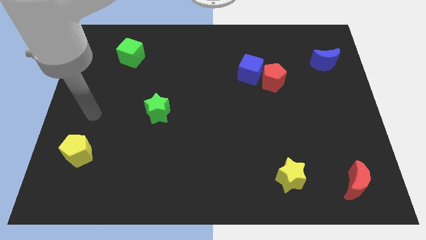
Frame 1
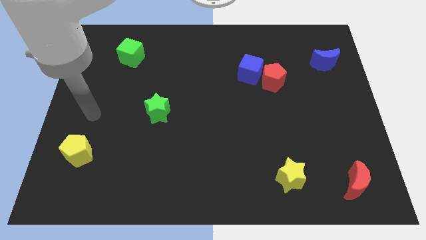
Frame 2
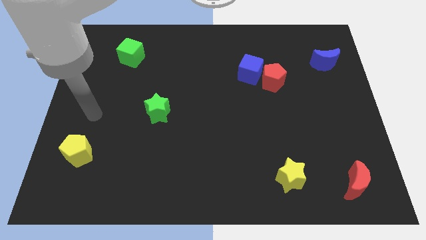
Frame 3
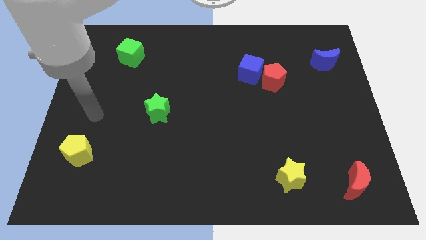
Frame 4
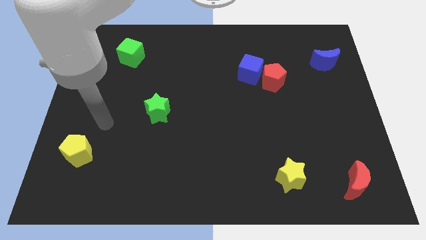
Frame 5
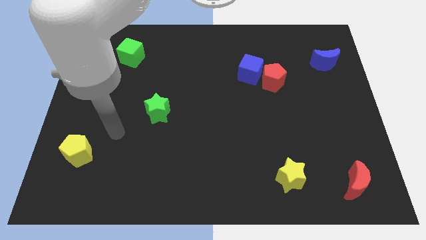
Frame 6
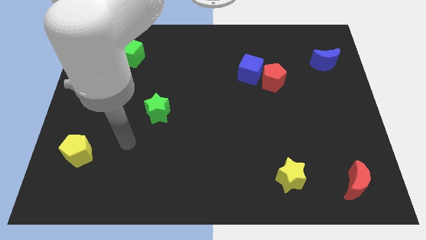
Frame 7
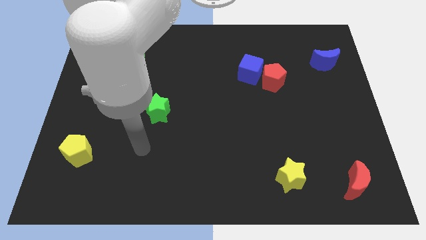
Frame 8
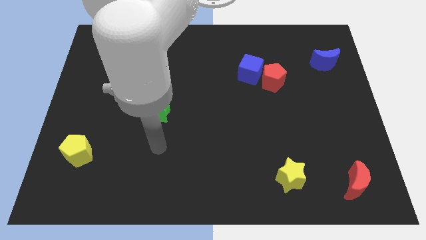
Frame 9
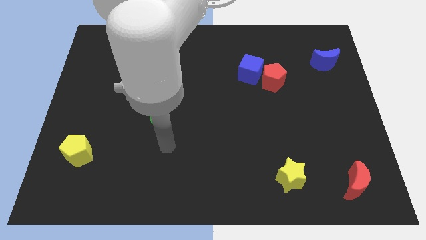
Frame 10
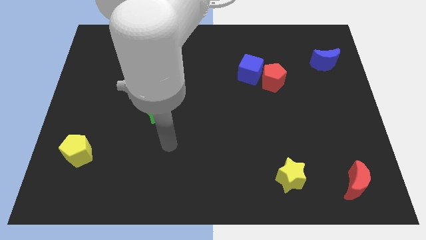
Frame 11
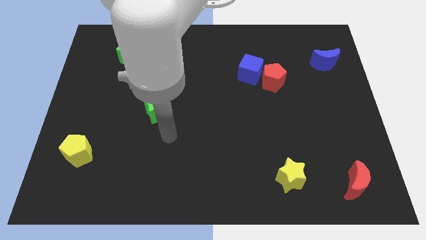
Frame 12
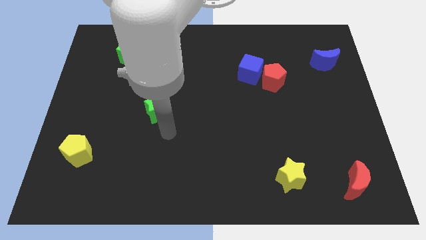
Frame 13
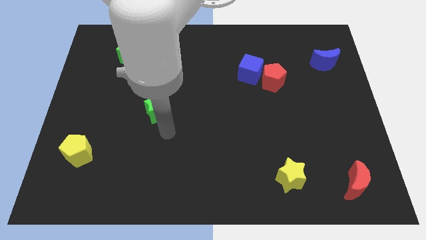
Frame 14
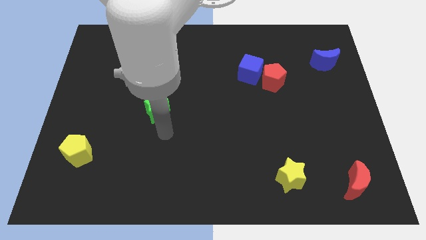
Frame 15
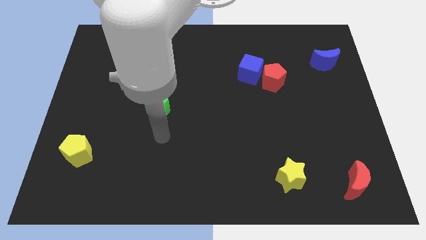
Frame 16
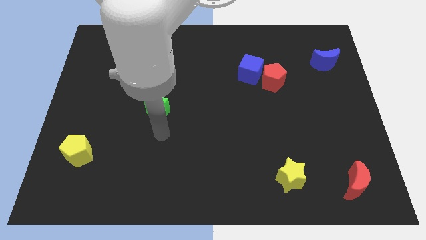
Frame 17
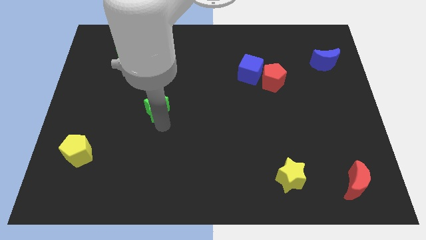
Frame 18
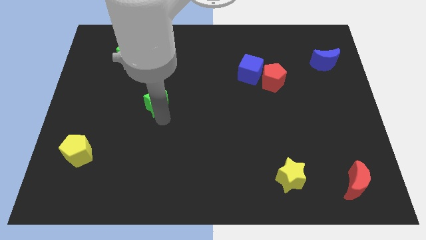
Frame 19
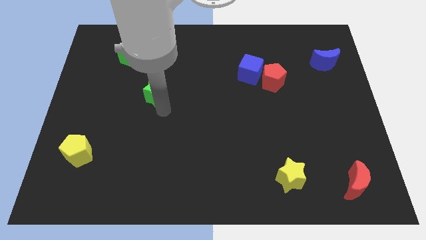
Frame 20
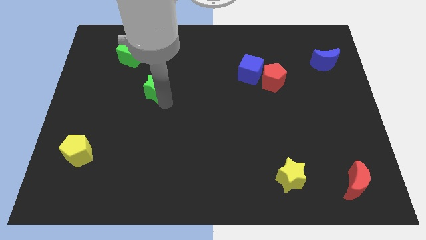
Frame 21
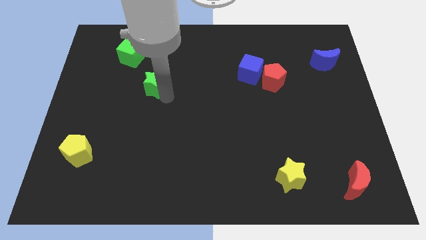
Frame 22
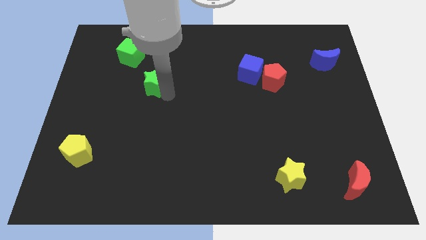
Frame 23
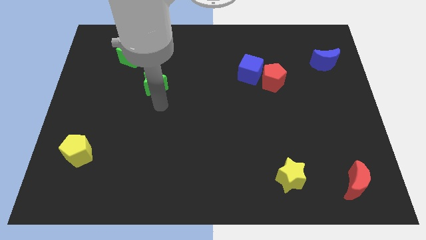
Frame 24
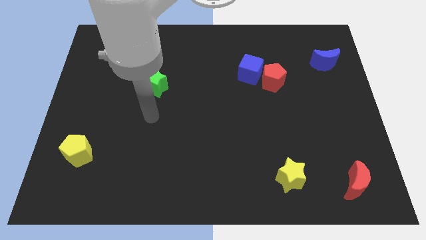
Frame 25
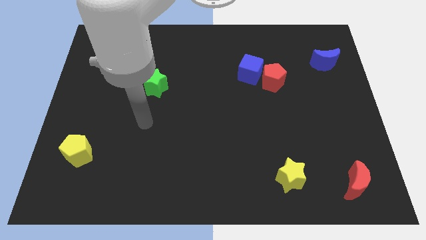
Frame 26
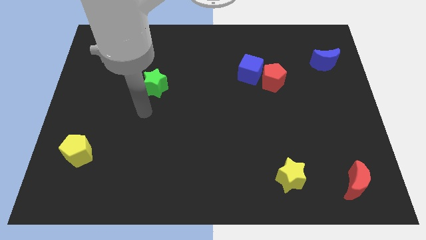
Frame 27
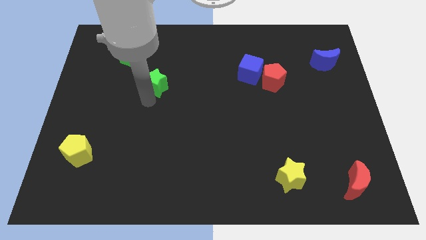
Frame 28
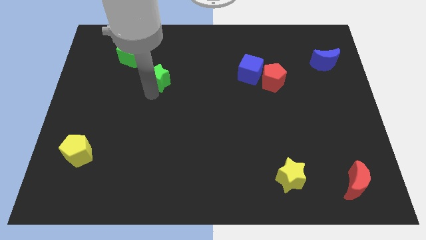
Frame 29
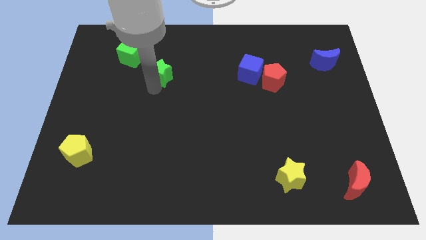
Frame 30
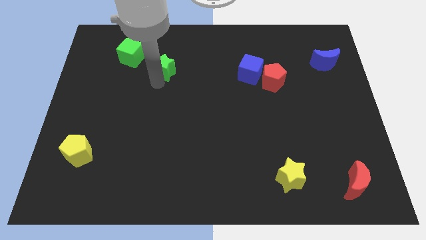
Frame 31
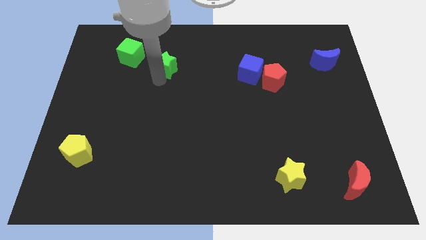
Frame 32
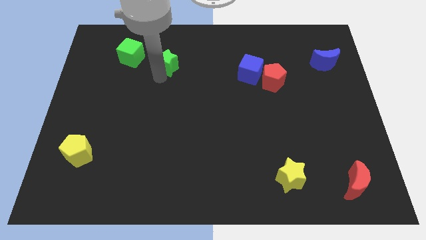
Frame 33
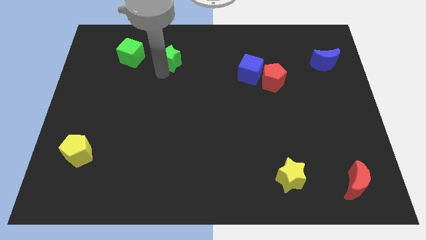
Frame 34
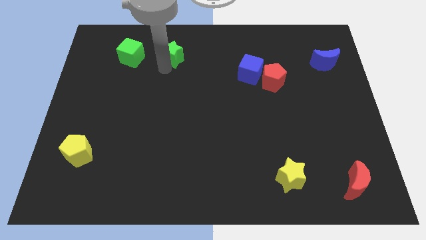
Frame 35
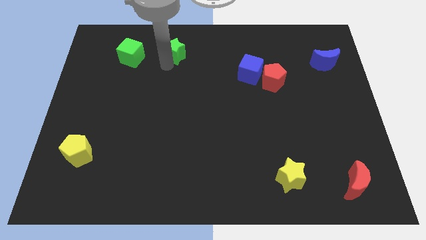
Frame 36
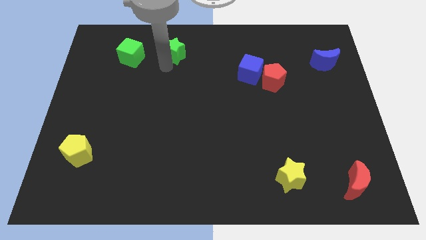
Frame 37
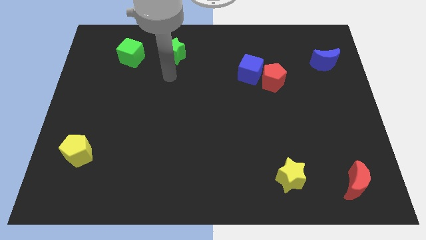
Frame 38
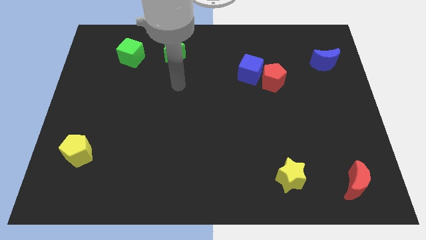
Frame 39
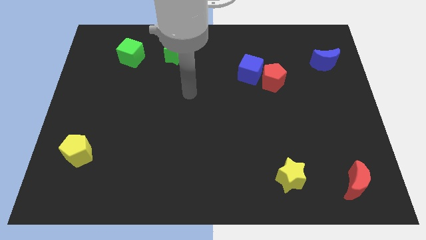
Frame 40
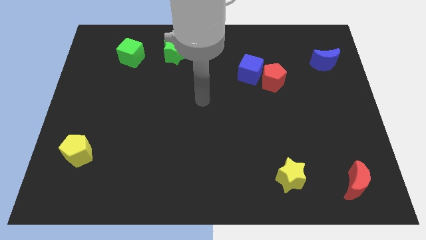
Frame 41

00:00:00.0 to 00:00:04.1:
push the green star to the right of the green cube

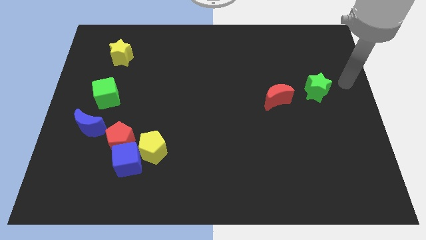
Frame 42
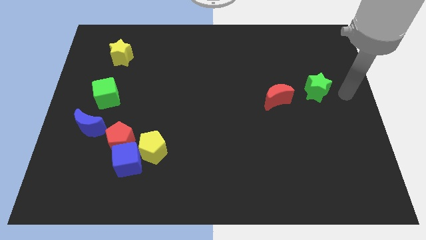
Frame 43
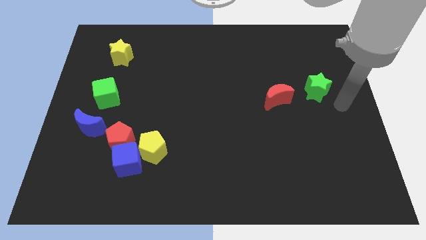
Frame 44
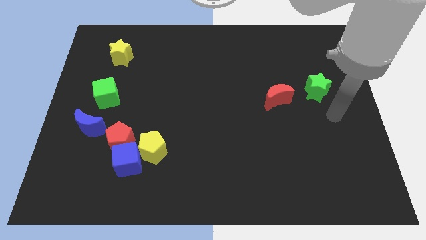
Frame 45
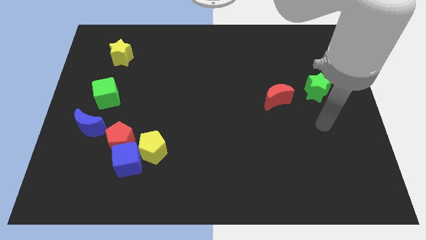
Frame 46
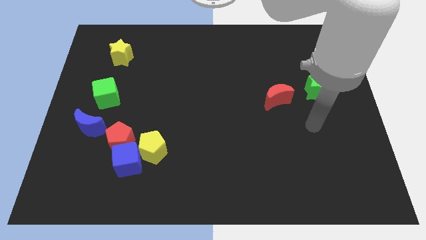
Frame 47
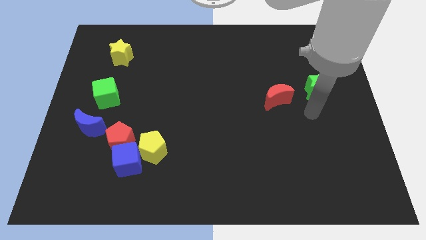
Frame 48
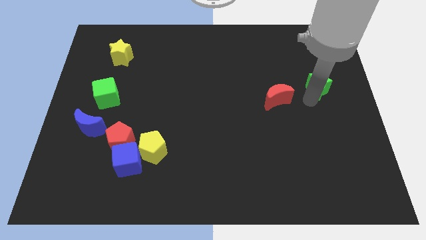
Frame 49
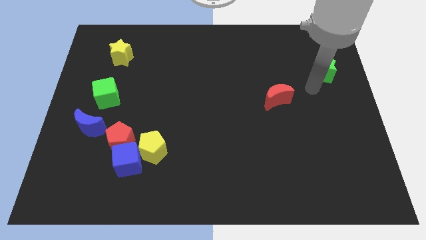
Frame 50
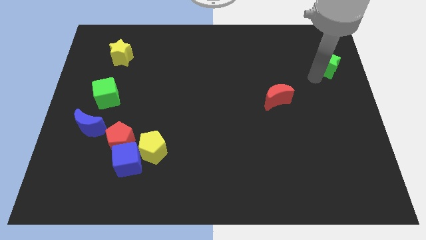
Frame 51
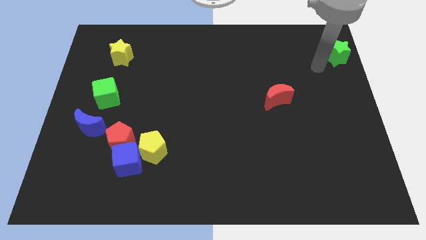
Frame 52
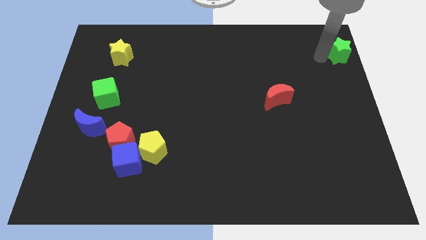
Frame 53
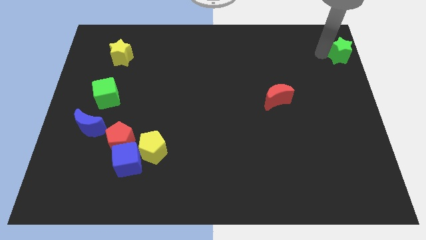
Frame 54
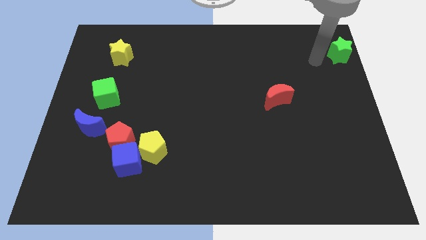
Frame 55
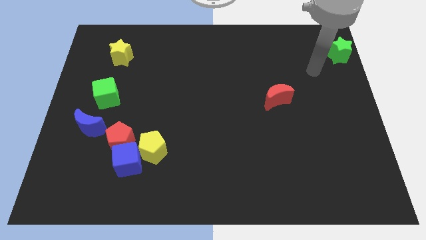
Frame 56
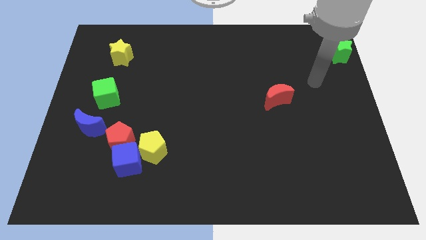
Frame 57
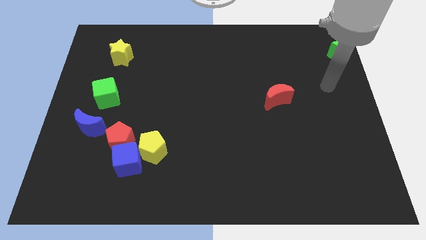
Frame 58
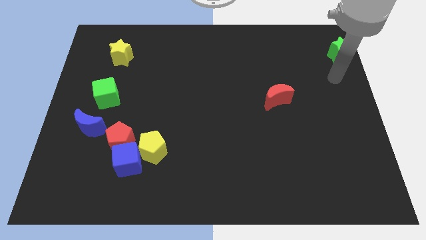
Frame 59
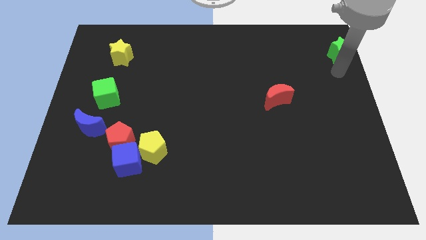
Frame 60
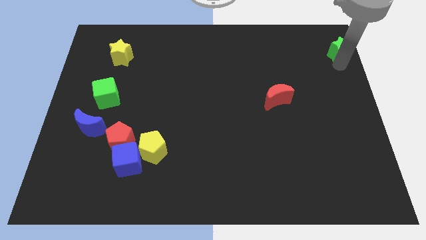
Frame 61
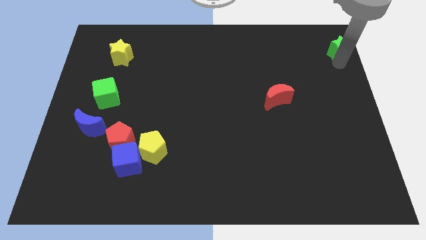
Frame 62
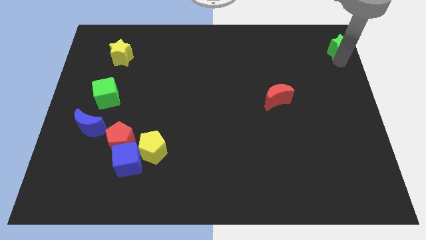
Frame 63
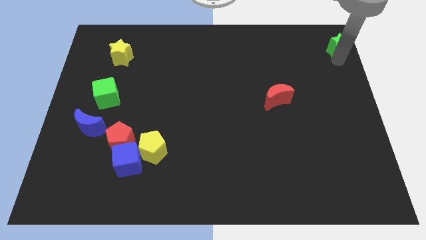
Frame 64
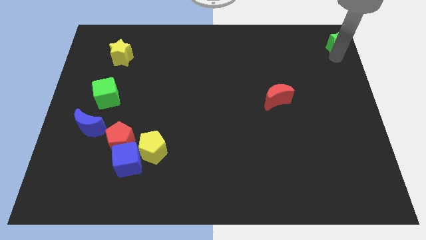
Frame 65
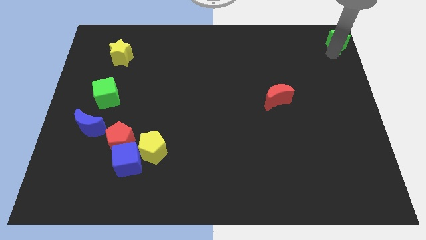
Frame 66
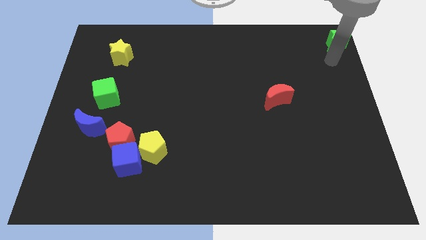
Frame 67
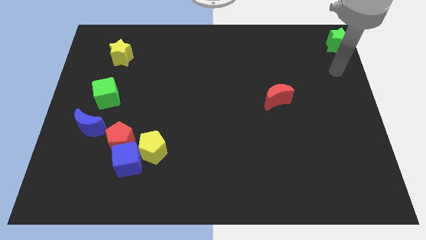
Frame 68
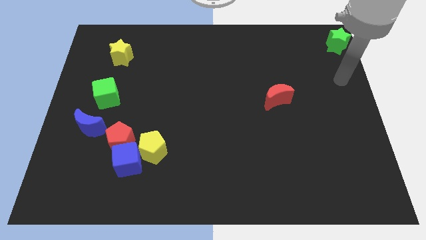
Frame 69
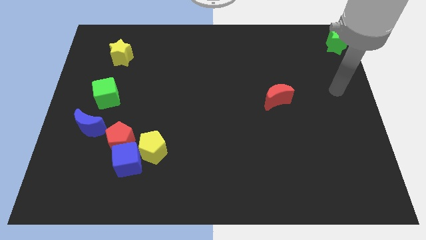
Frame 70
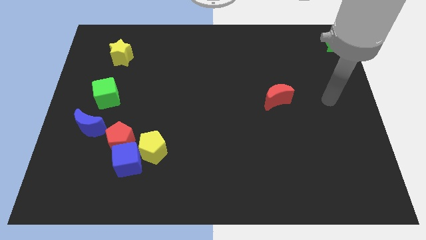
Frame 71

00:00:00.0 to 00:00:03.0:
move the green star to the top right corner

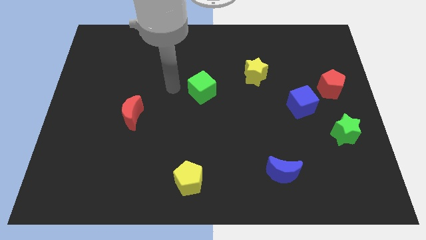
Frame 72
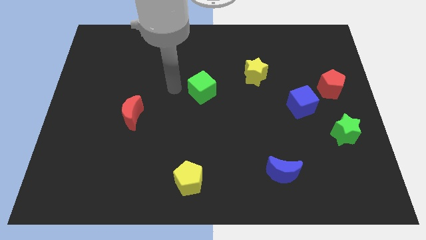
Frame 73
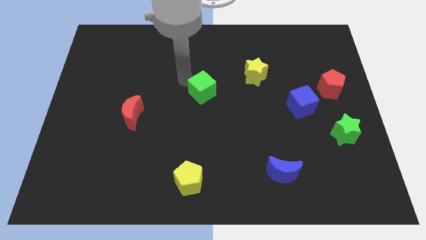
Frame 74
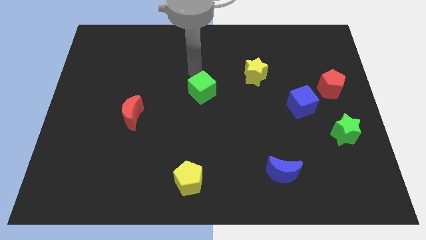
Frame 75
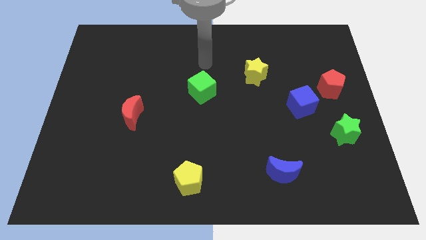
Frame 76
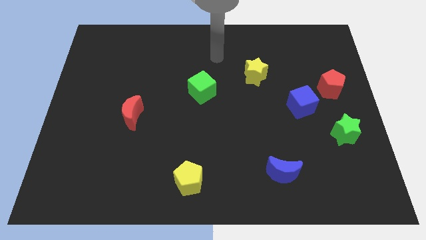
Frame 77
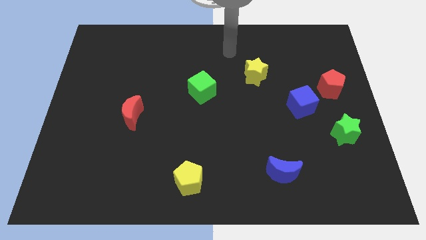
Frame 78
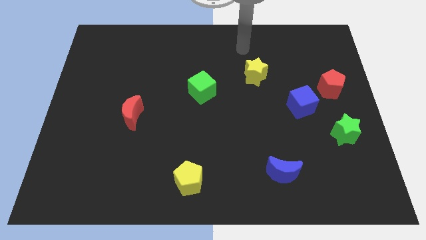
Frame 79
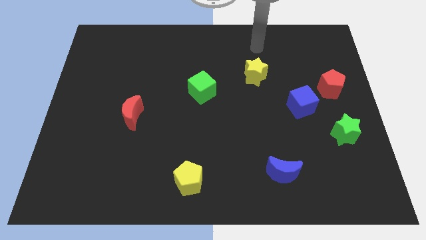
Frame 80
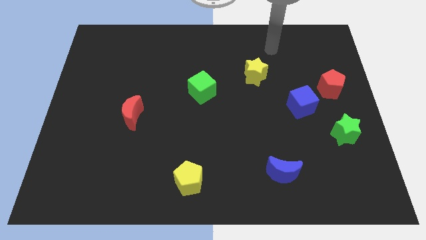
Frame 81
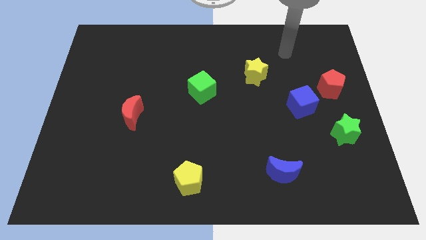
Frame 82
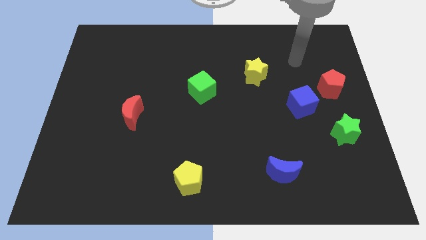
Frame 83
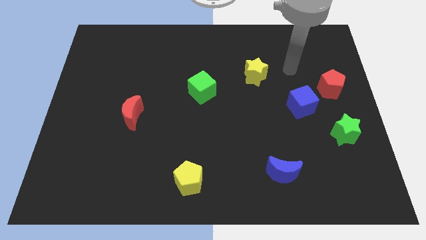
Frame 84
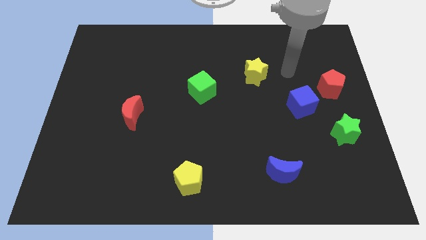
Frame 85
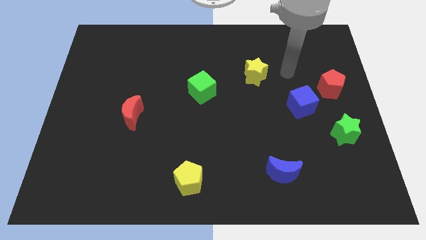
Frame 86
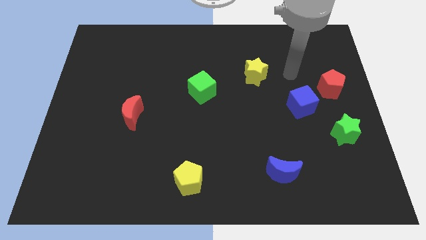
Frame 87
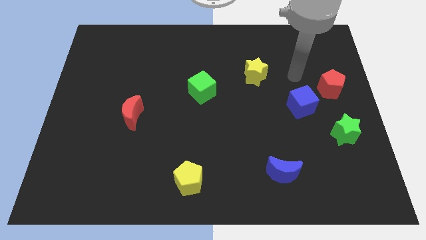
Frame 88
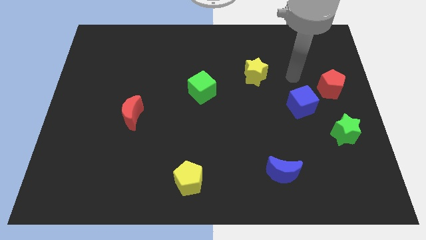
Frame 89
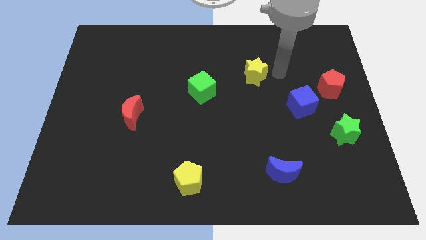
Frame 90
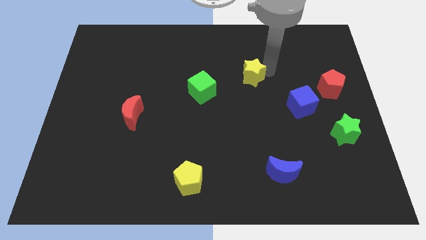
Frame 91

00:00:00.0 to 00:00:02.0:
point your arm towards yellow star
